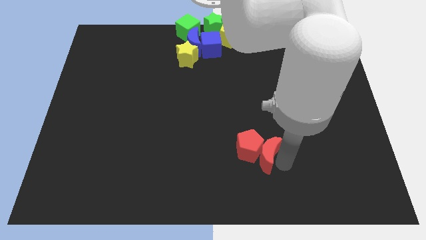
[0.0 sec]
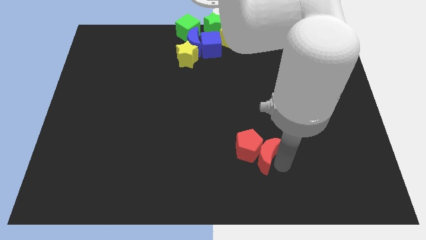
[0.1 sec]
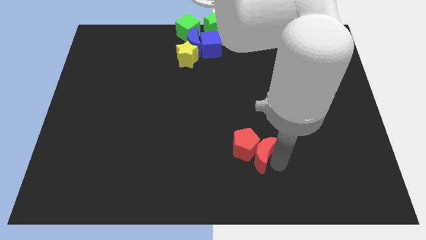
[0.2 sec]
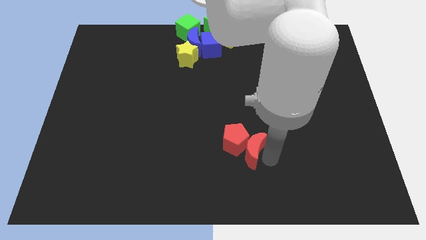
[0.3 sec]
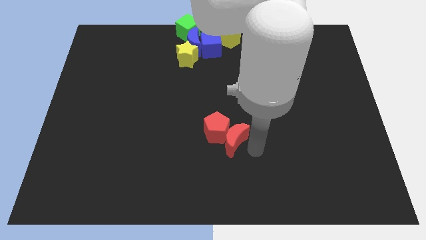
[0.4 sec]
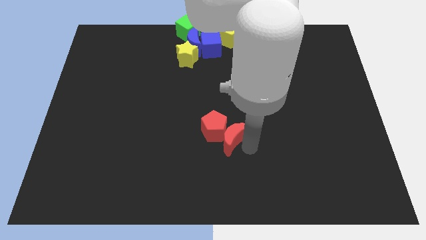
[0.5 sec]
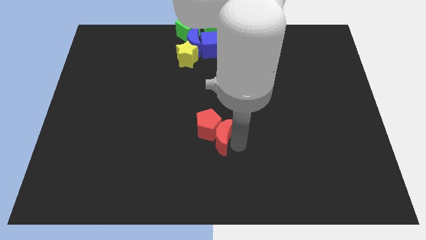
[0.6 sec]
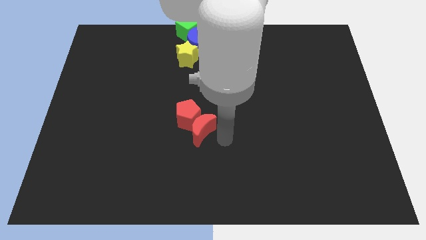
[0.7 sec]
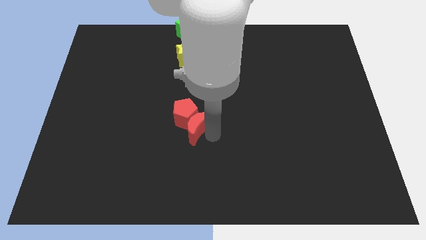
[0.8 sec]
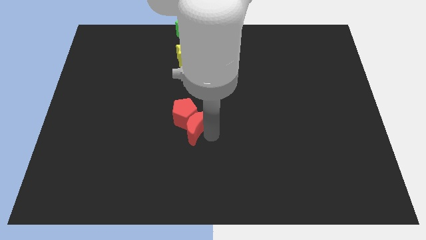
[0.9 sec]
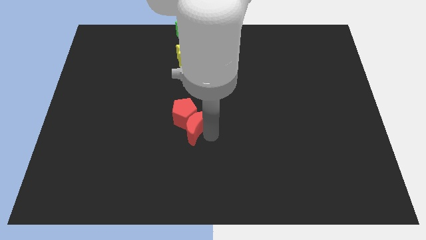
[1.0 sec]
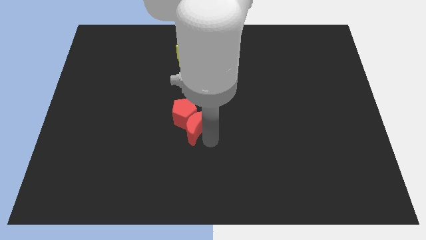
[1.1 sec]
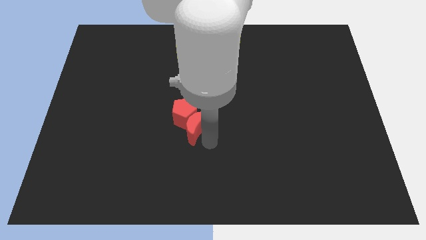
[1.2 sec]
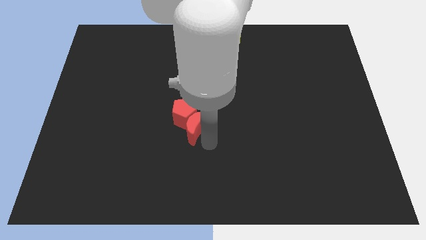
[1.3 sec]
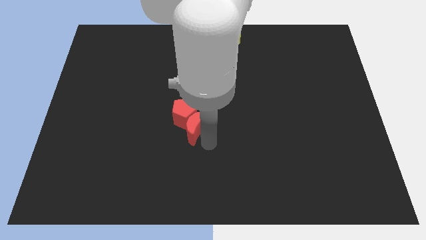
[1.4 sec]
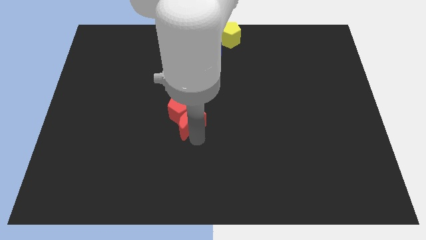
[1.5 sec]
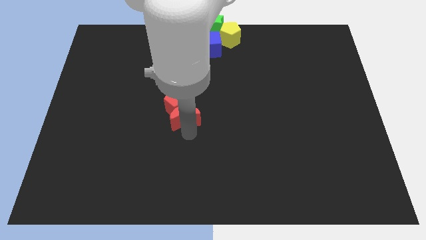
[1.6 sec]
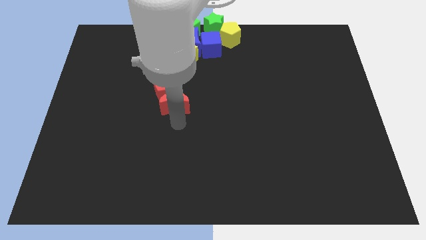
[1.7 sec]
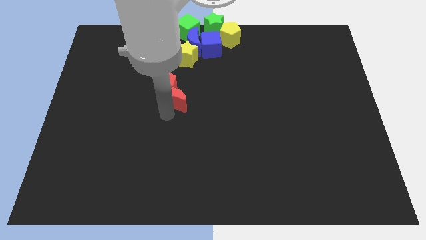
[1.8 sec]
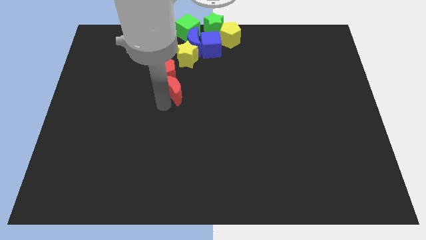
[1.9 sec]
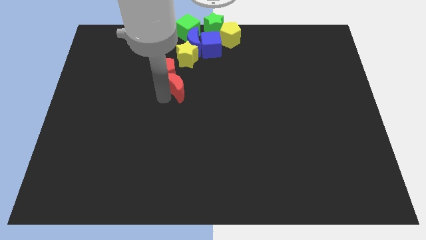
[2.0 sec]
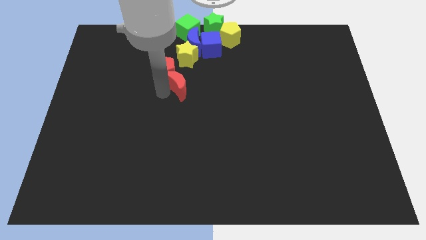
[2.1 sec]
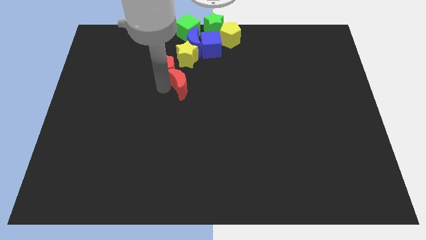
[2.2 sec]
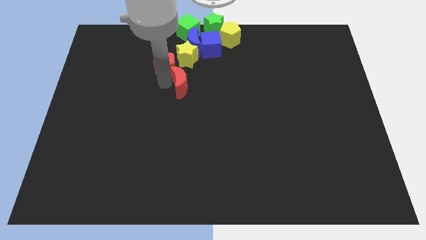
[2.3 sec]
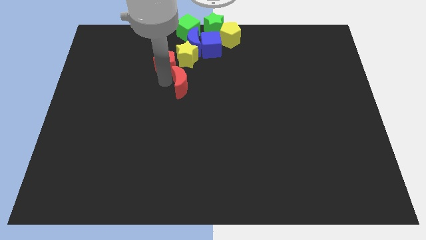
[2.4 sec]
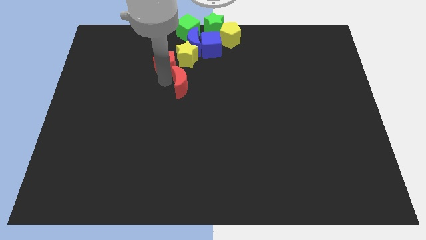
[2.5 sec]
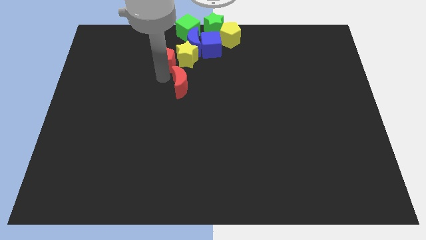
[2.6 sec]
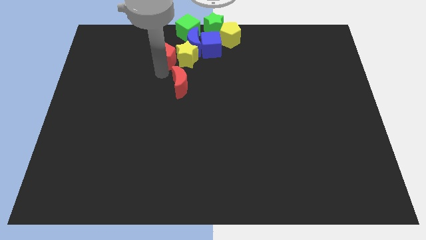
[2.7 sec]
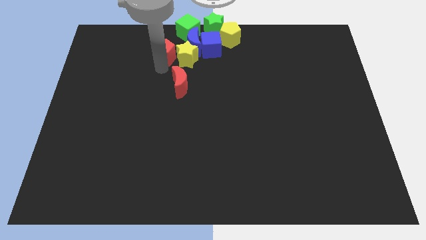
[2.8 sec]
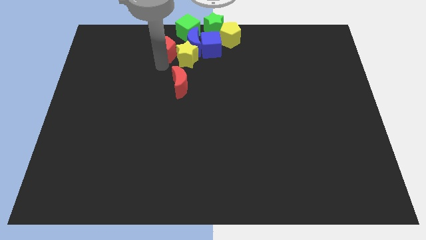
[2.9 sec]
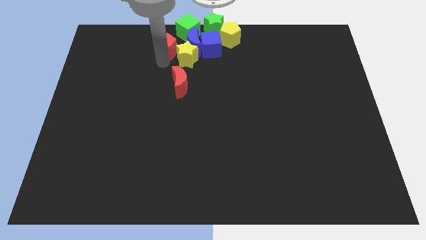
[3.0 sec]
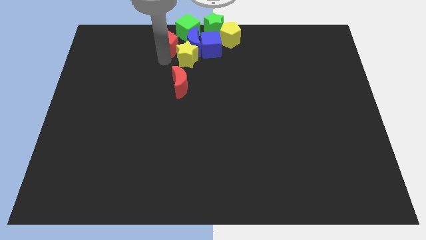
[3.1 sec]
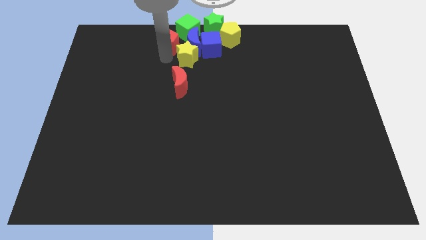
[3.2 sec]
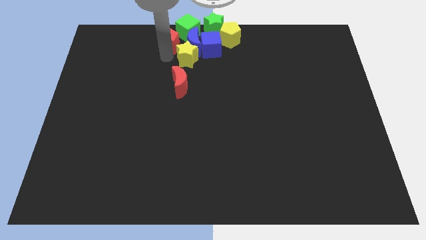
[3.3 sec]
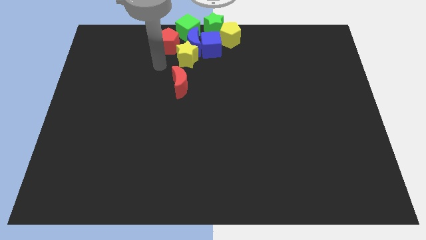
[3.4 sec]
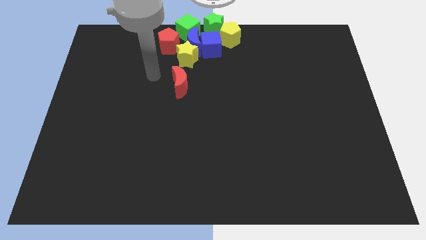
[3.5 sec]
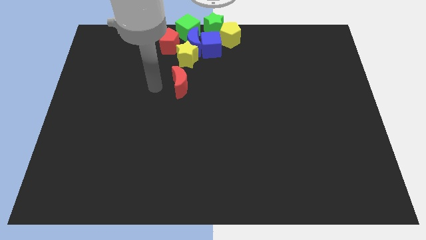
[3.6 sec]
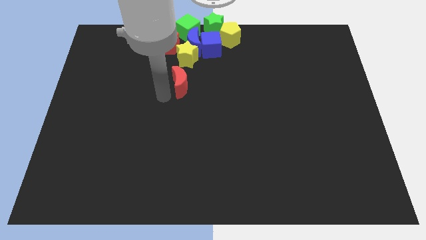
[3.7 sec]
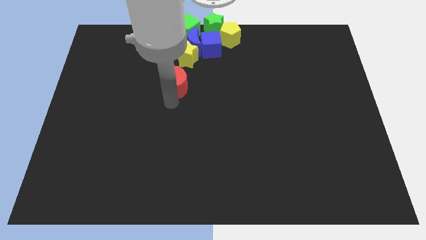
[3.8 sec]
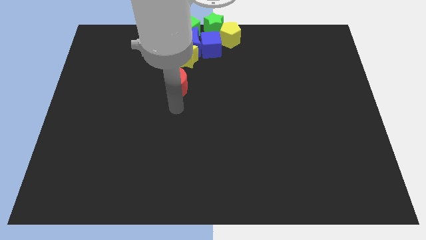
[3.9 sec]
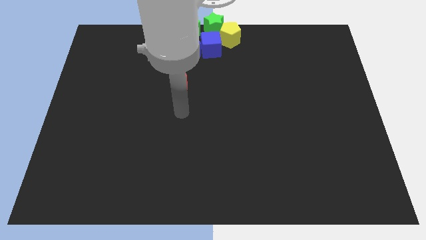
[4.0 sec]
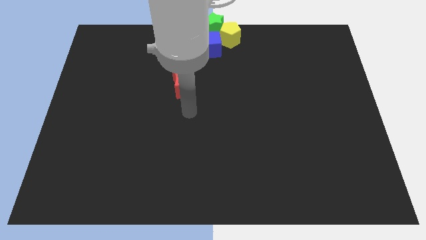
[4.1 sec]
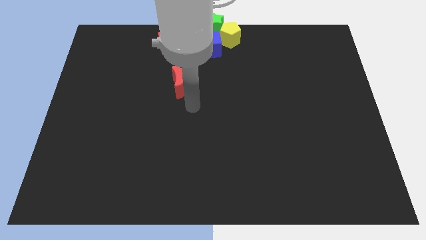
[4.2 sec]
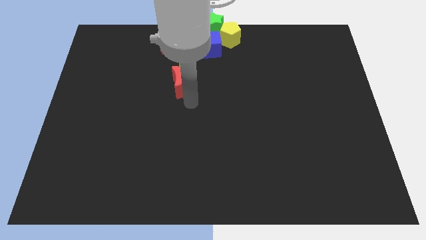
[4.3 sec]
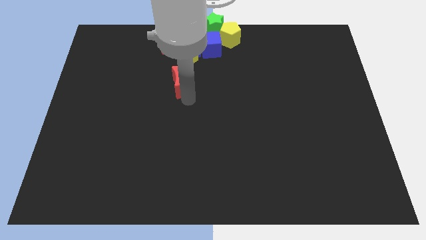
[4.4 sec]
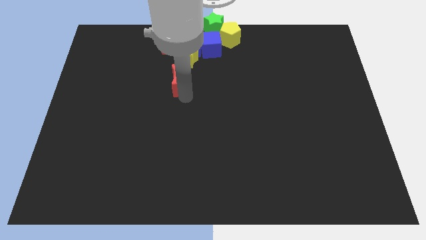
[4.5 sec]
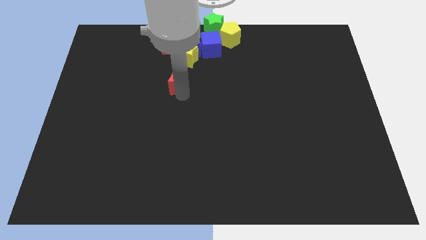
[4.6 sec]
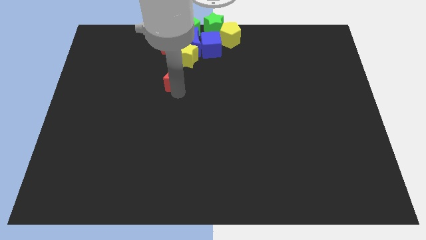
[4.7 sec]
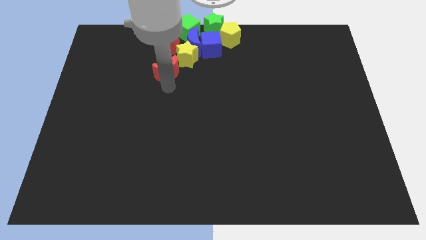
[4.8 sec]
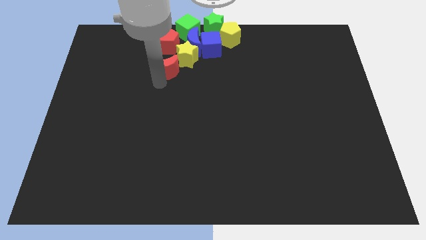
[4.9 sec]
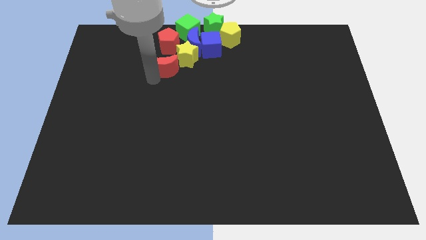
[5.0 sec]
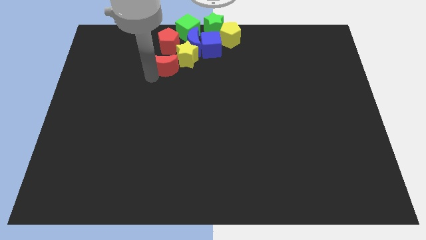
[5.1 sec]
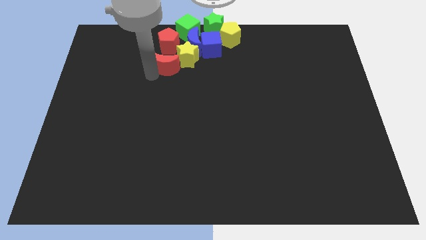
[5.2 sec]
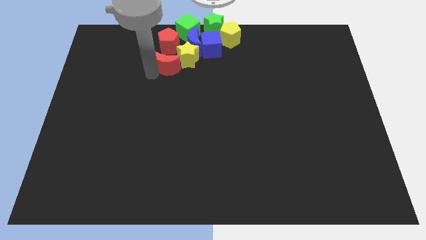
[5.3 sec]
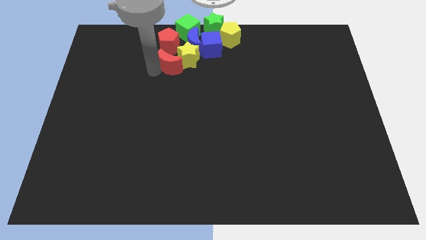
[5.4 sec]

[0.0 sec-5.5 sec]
push the red blocks to the left of the yellow star

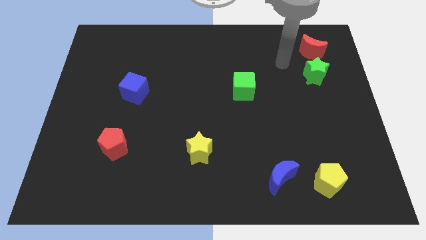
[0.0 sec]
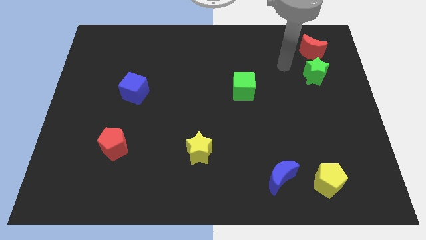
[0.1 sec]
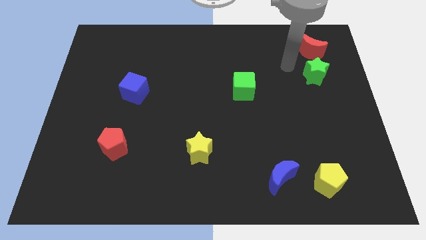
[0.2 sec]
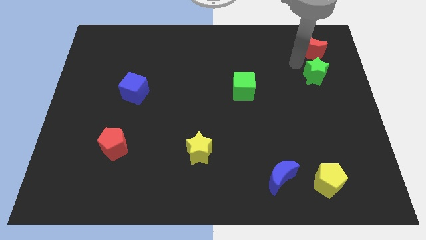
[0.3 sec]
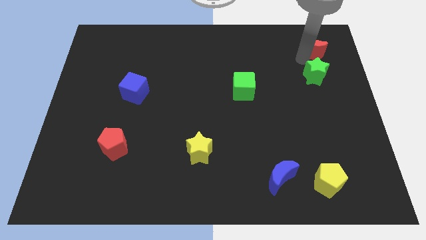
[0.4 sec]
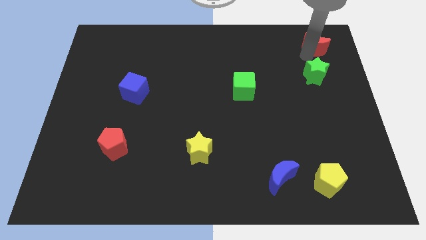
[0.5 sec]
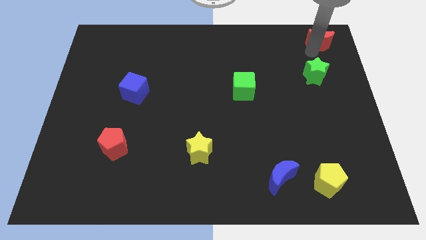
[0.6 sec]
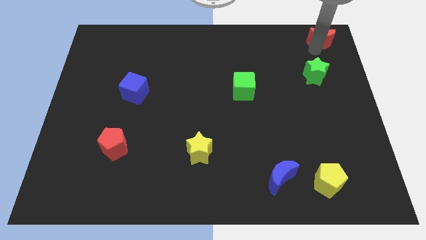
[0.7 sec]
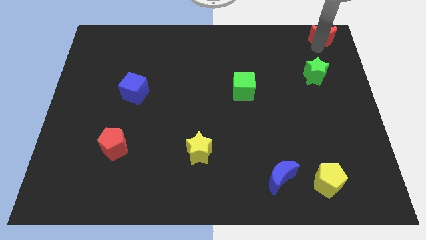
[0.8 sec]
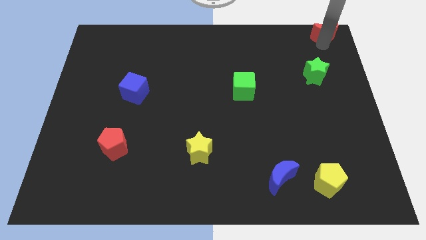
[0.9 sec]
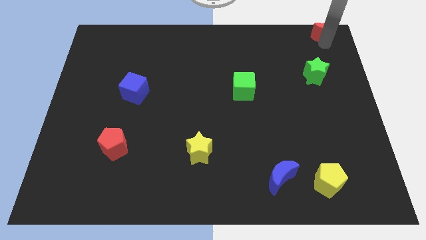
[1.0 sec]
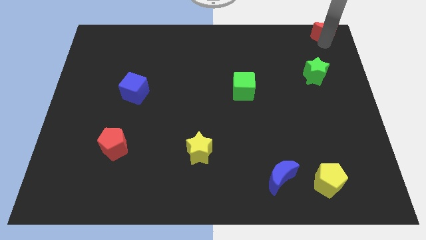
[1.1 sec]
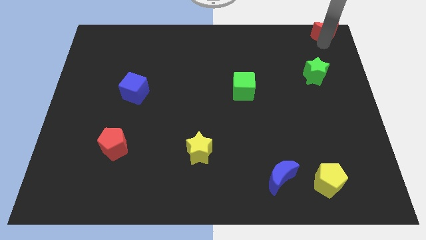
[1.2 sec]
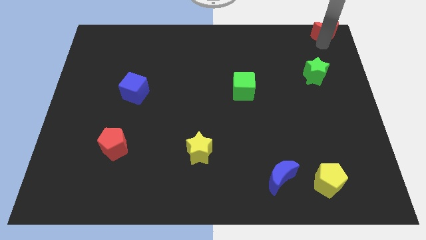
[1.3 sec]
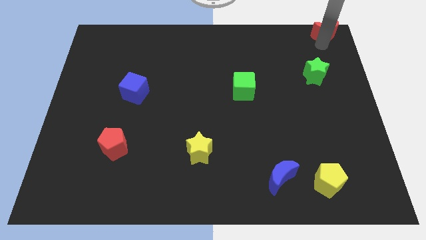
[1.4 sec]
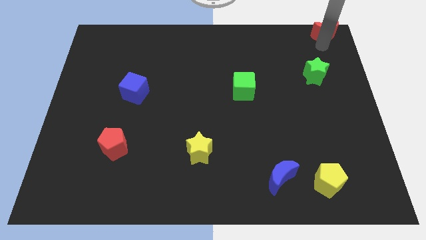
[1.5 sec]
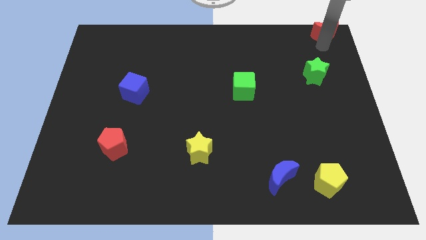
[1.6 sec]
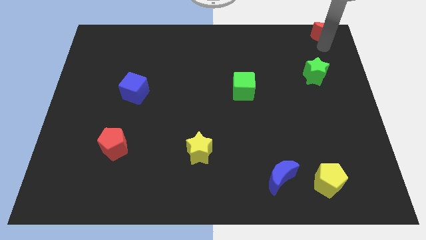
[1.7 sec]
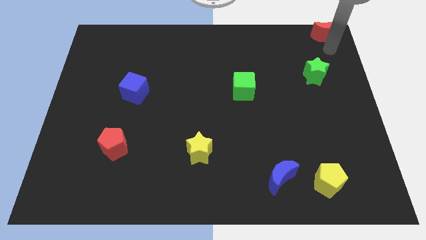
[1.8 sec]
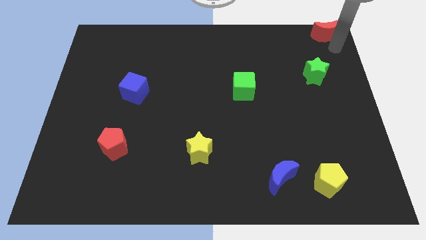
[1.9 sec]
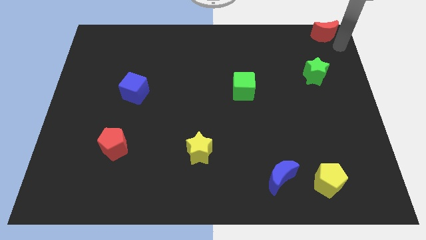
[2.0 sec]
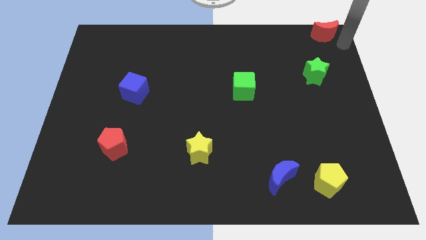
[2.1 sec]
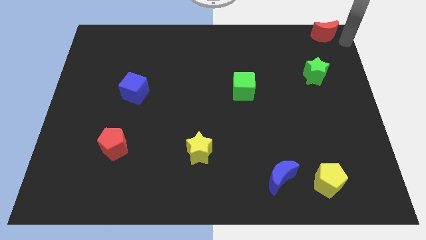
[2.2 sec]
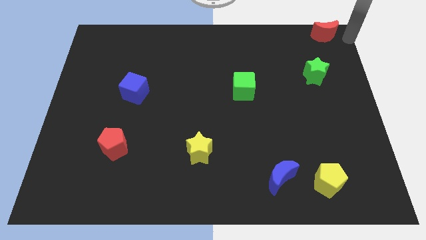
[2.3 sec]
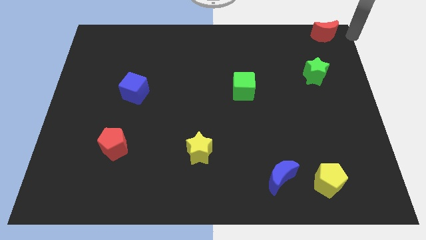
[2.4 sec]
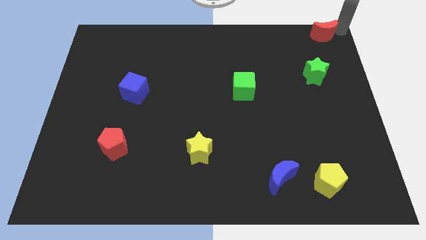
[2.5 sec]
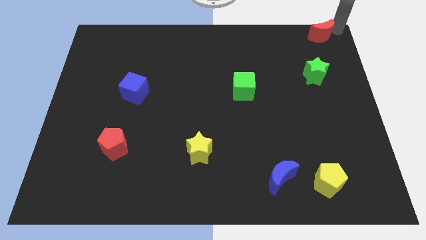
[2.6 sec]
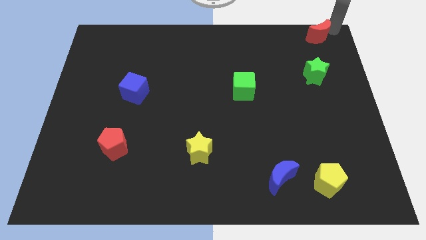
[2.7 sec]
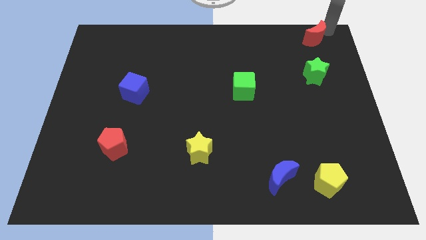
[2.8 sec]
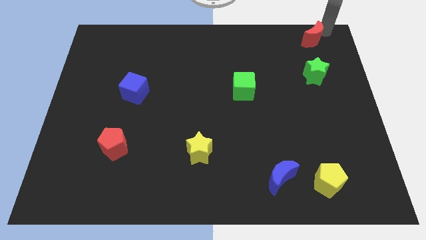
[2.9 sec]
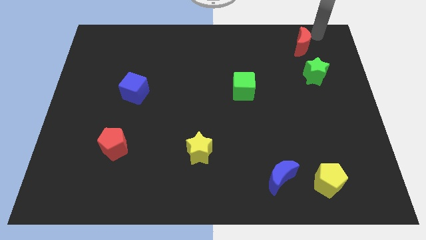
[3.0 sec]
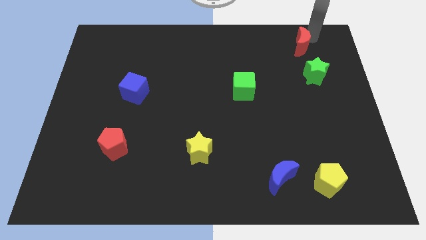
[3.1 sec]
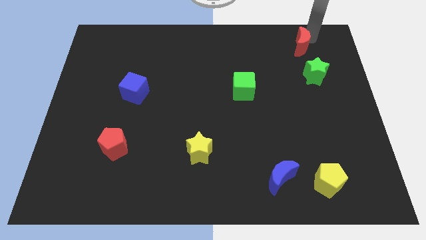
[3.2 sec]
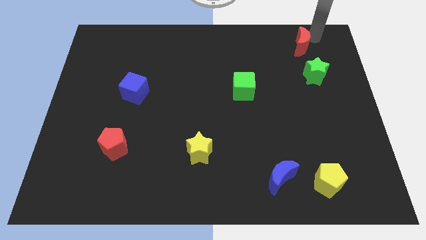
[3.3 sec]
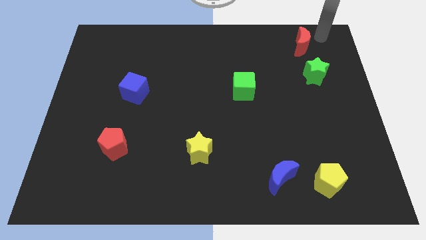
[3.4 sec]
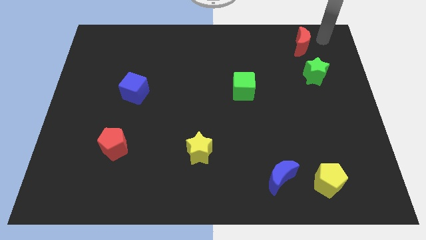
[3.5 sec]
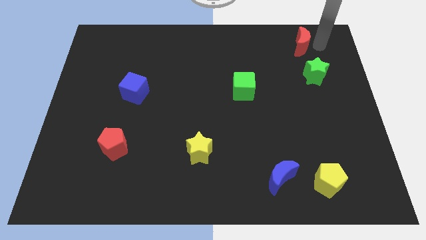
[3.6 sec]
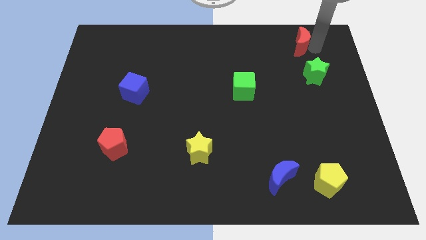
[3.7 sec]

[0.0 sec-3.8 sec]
separate red moon and green star
